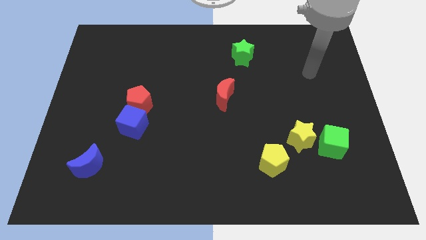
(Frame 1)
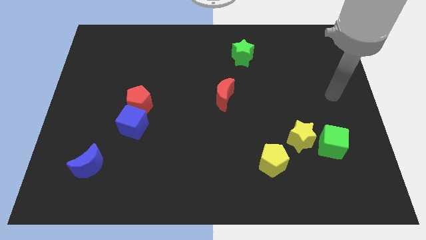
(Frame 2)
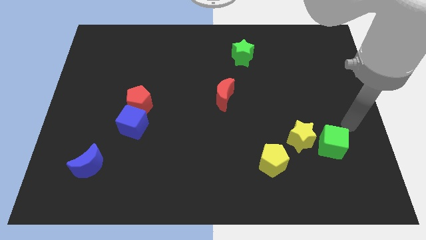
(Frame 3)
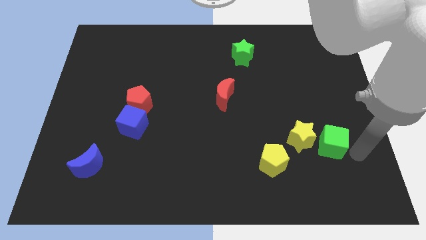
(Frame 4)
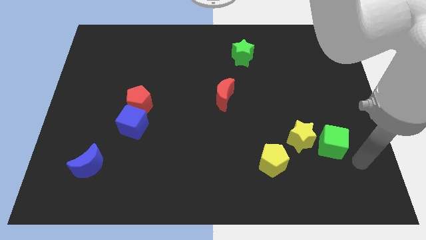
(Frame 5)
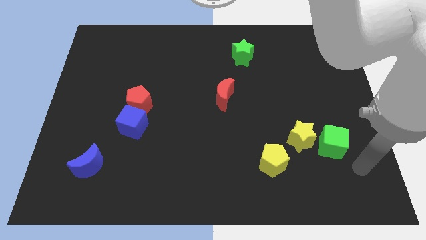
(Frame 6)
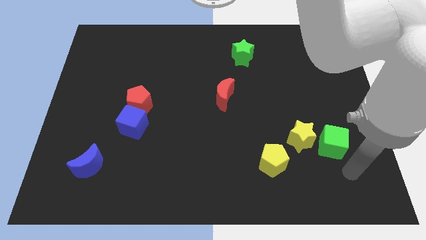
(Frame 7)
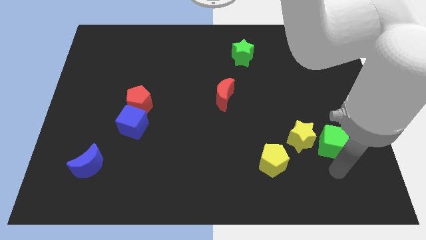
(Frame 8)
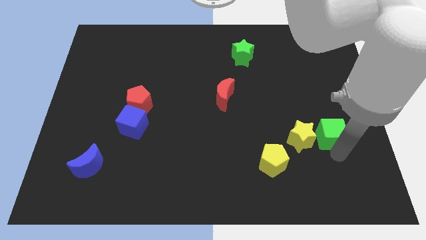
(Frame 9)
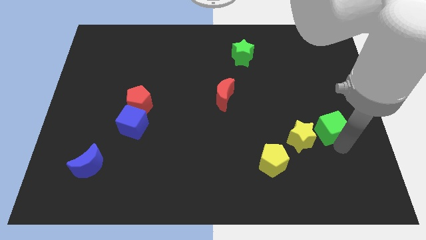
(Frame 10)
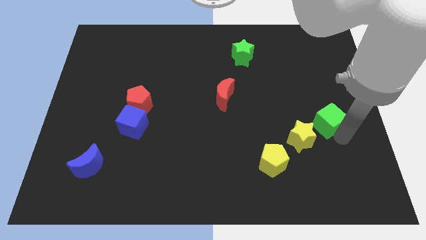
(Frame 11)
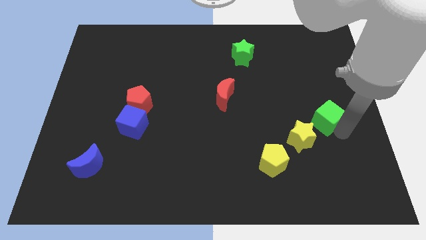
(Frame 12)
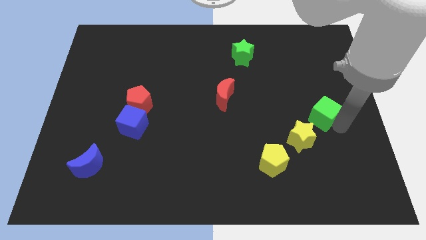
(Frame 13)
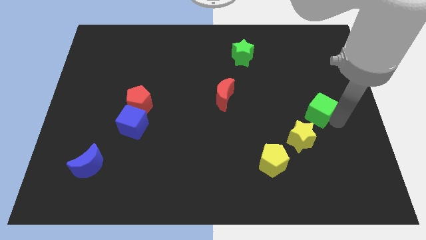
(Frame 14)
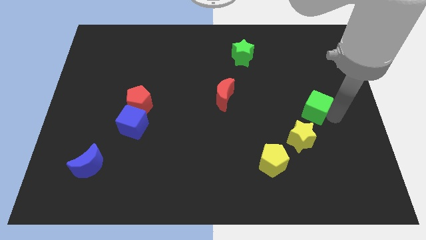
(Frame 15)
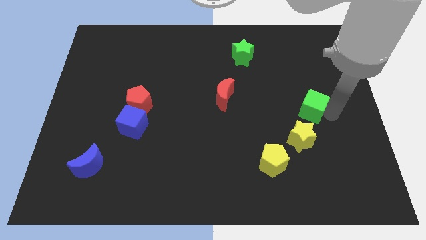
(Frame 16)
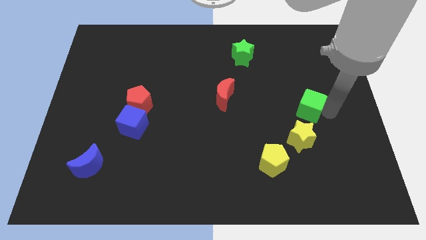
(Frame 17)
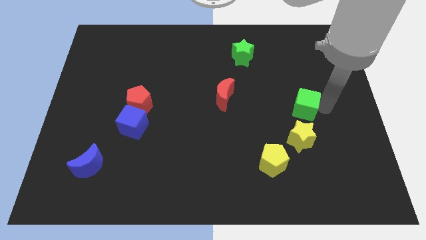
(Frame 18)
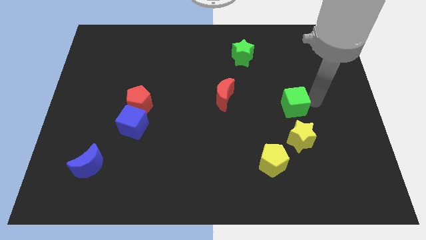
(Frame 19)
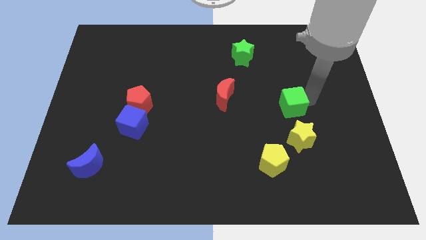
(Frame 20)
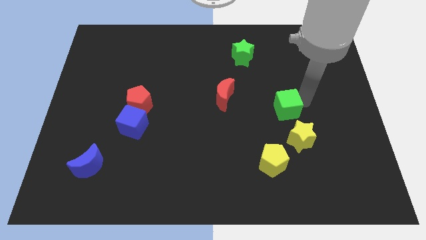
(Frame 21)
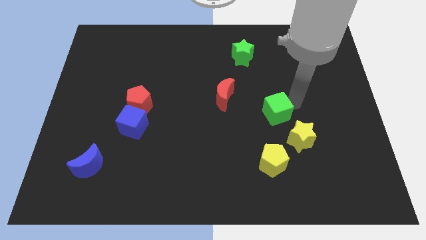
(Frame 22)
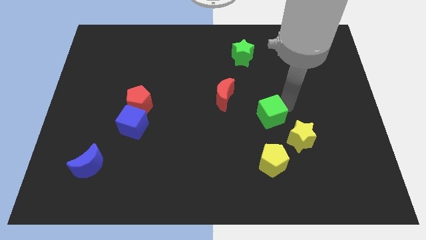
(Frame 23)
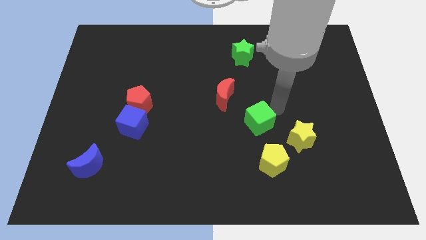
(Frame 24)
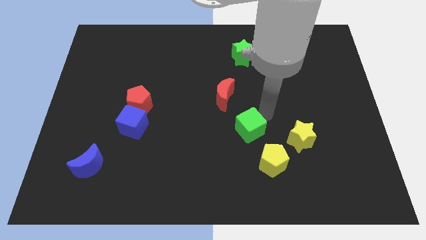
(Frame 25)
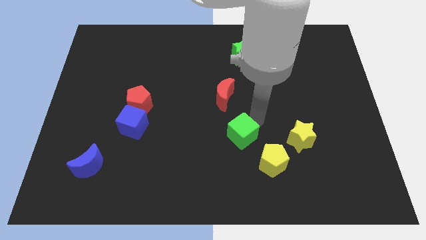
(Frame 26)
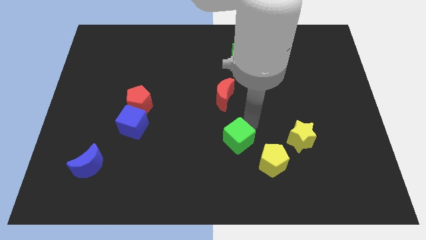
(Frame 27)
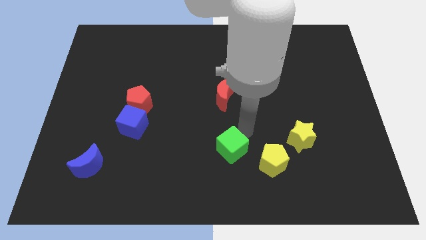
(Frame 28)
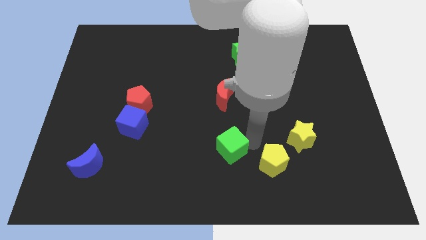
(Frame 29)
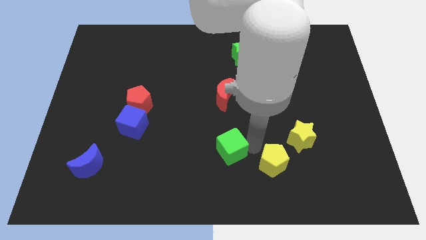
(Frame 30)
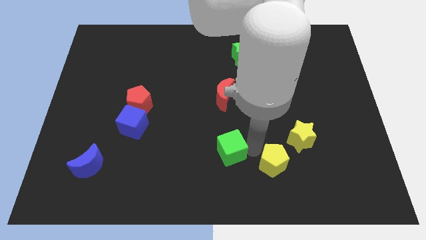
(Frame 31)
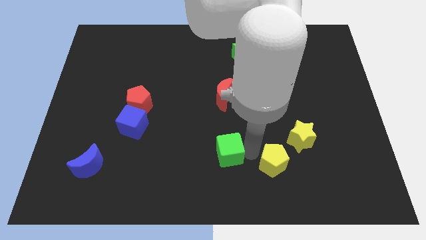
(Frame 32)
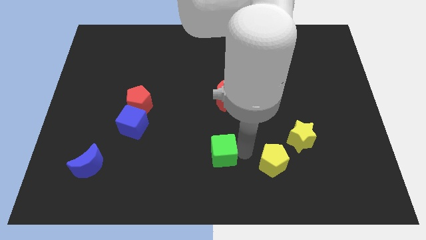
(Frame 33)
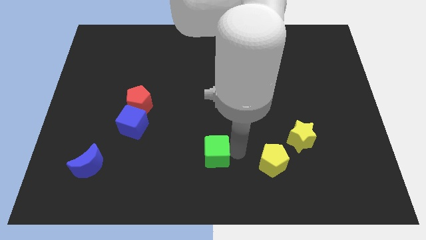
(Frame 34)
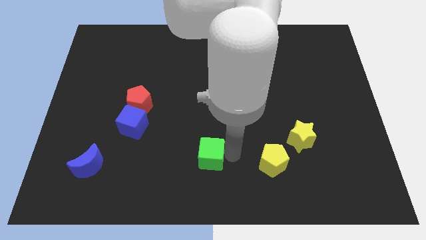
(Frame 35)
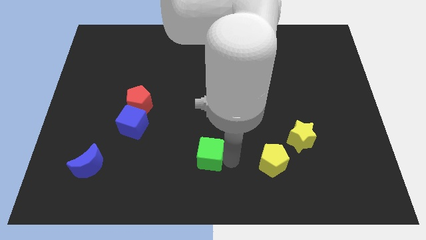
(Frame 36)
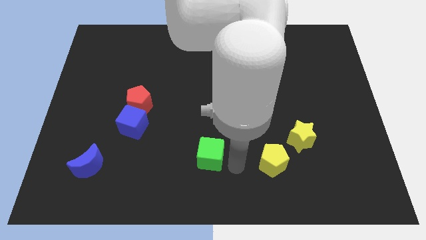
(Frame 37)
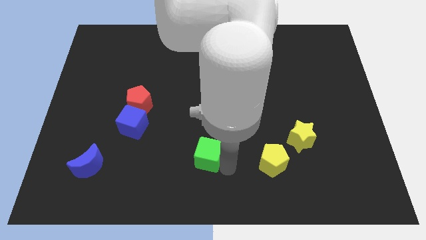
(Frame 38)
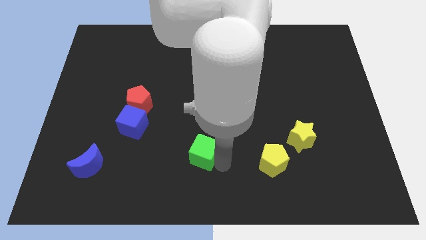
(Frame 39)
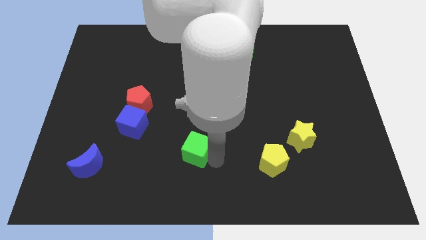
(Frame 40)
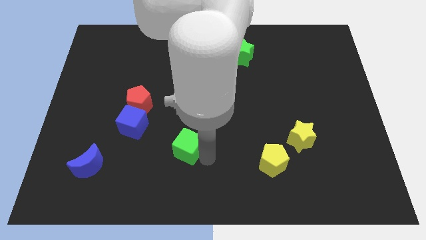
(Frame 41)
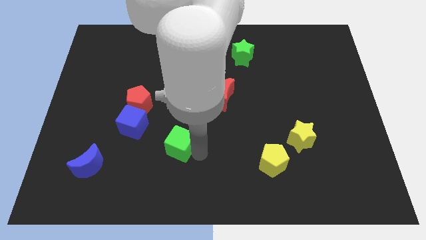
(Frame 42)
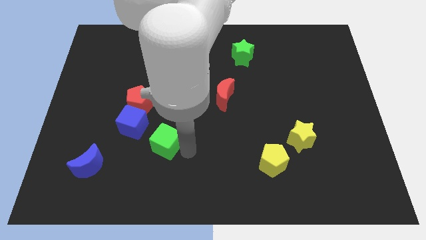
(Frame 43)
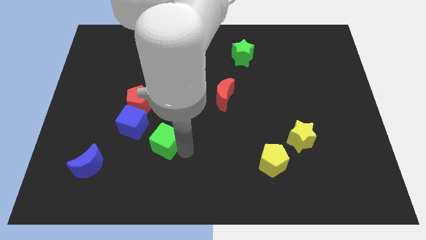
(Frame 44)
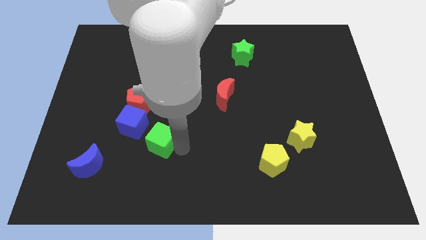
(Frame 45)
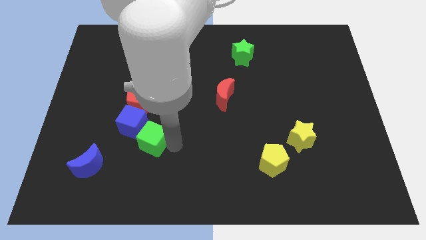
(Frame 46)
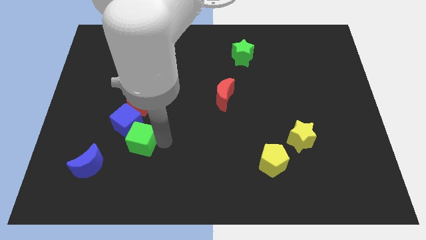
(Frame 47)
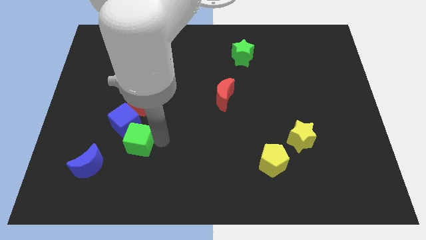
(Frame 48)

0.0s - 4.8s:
slide the green cube to the blue cube

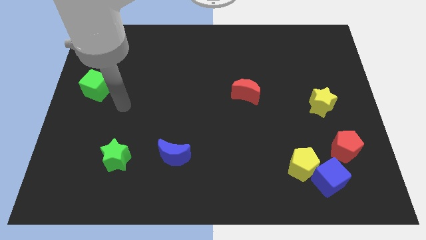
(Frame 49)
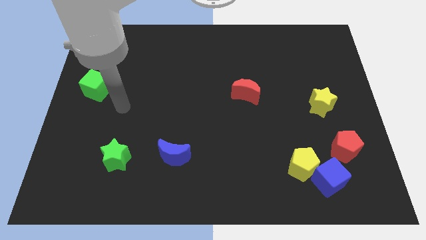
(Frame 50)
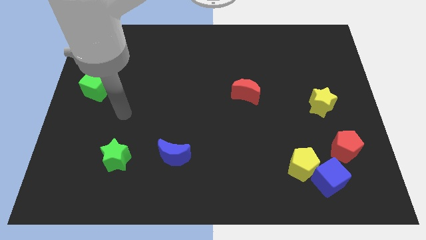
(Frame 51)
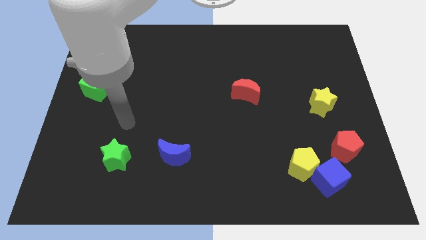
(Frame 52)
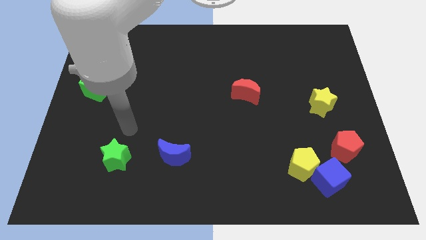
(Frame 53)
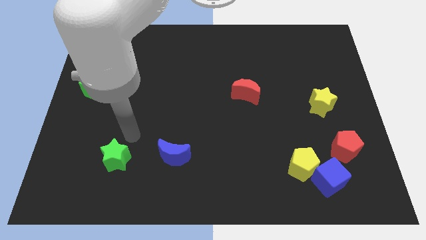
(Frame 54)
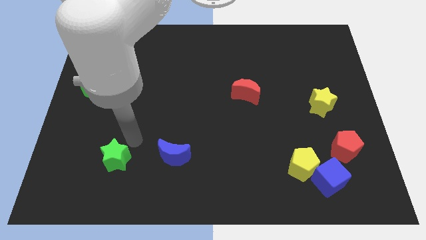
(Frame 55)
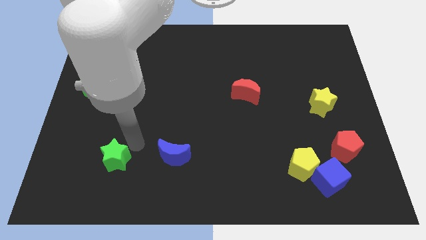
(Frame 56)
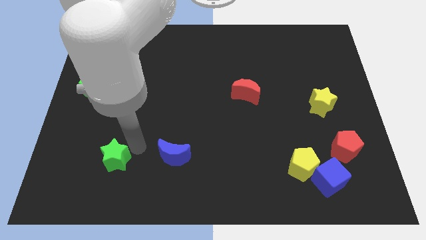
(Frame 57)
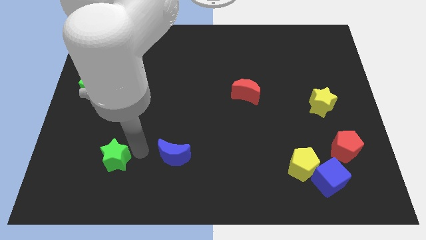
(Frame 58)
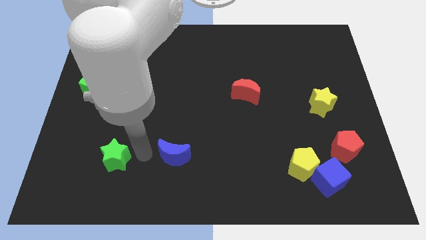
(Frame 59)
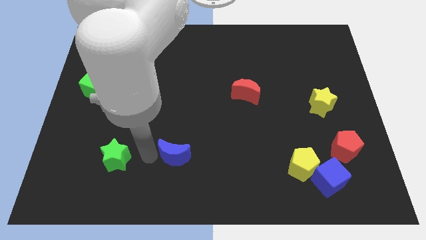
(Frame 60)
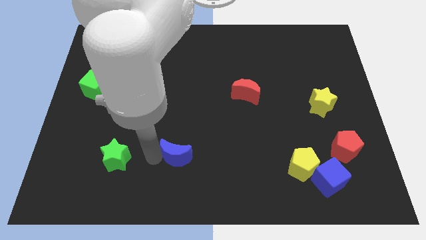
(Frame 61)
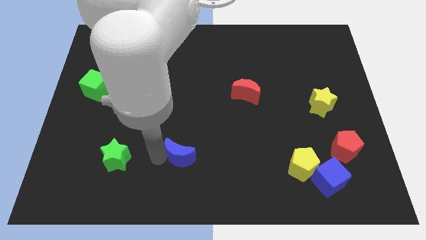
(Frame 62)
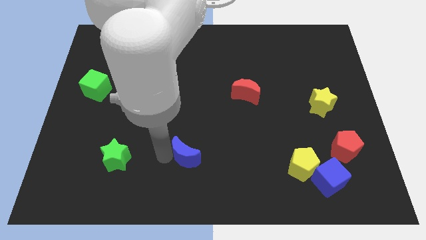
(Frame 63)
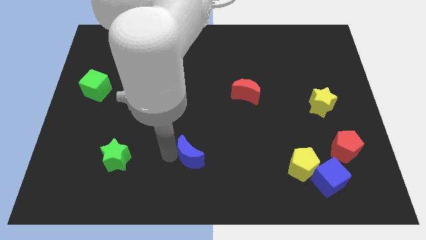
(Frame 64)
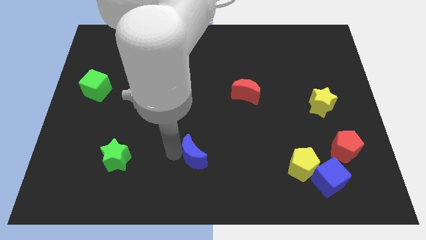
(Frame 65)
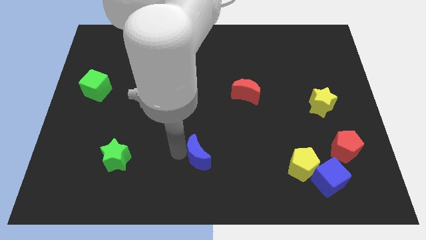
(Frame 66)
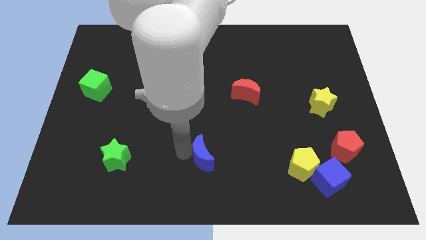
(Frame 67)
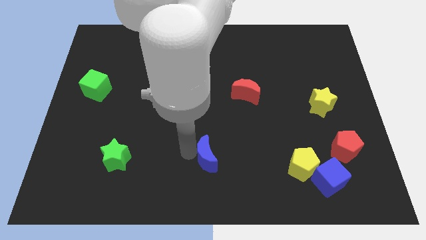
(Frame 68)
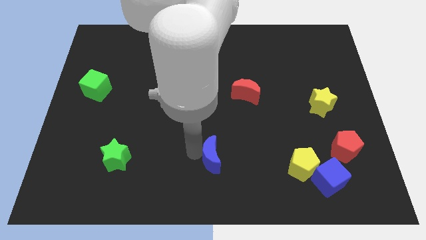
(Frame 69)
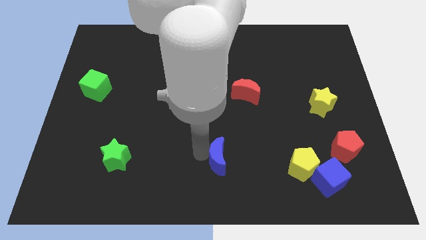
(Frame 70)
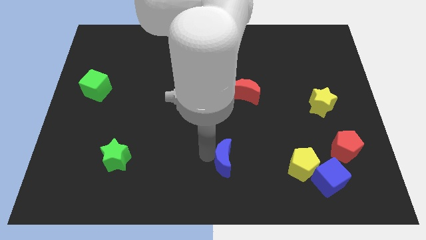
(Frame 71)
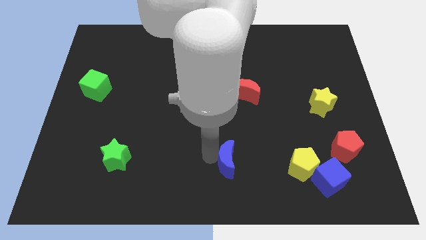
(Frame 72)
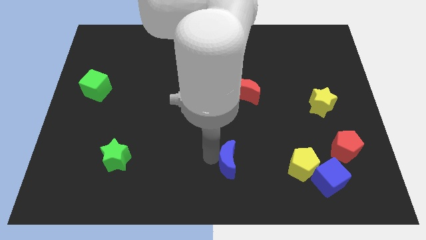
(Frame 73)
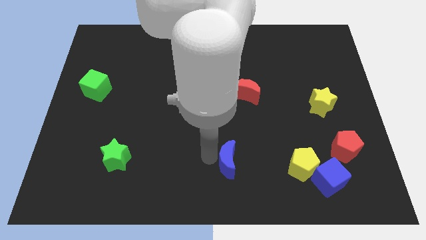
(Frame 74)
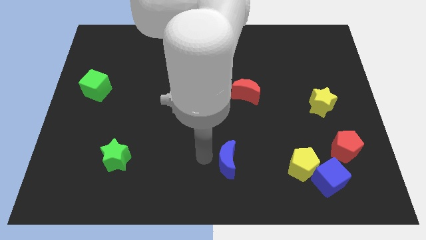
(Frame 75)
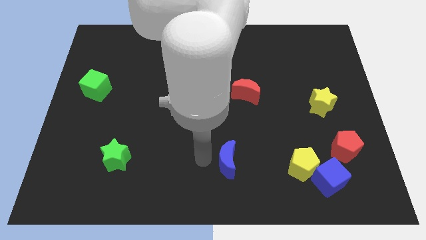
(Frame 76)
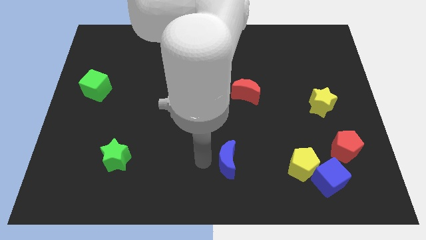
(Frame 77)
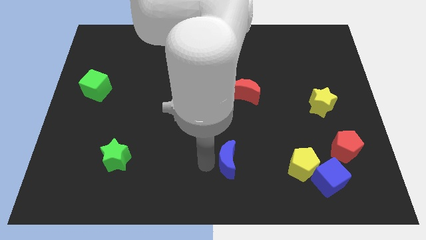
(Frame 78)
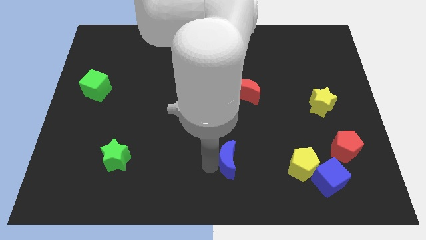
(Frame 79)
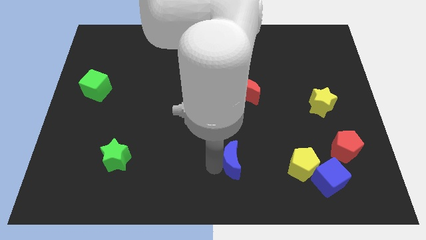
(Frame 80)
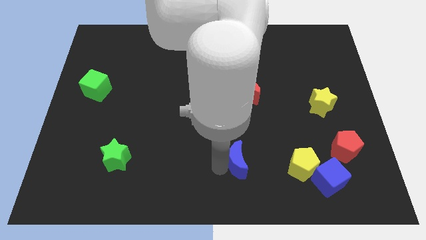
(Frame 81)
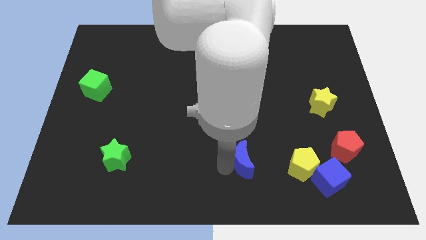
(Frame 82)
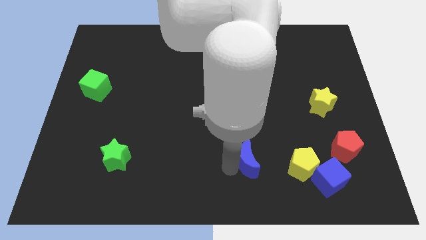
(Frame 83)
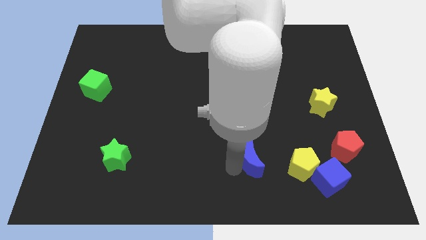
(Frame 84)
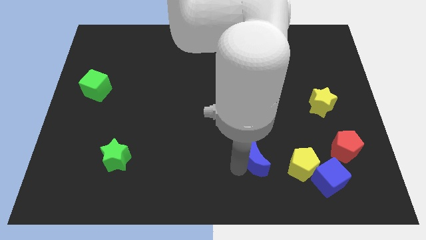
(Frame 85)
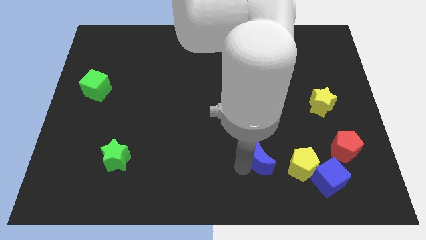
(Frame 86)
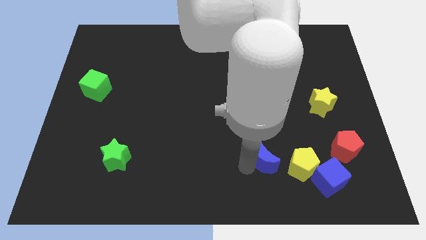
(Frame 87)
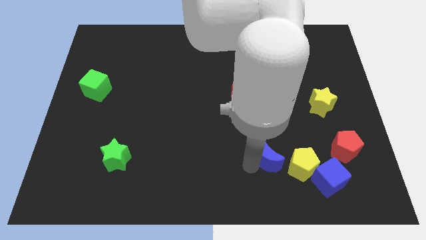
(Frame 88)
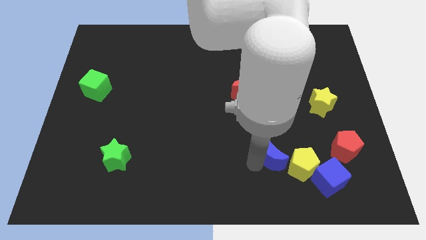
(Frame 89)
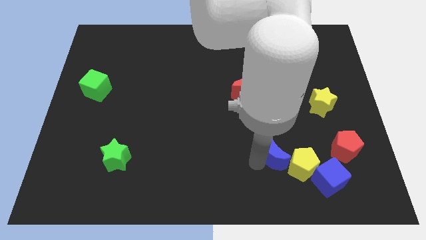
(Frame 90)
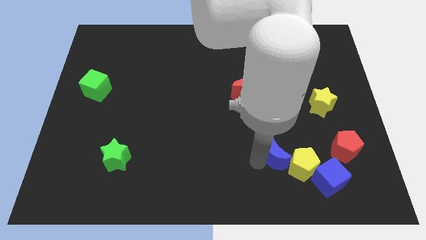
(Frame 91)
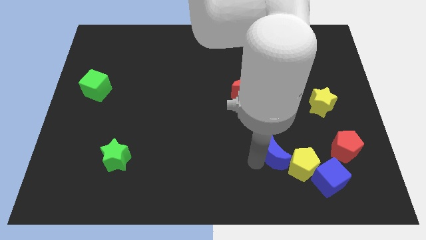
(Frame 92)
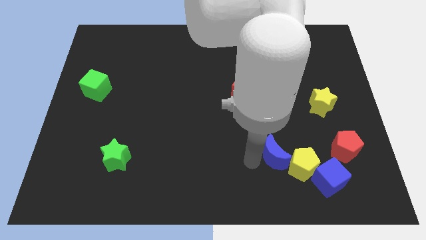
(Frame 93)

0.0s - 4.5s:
move the blue moon close to the yellow pentagon
